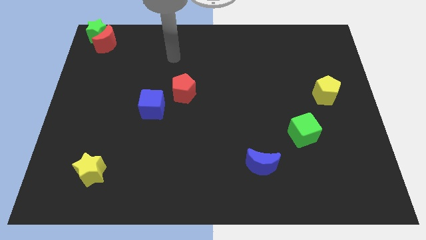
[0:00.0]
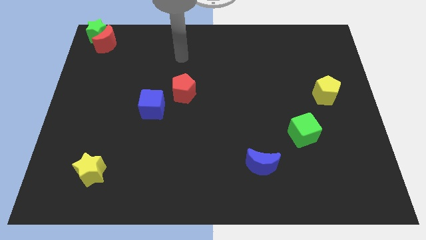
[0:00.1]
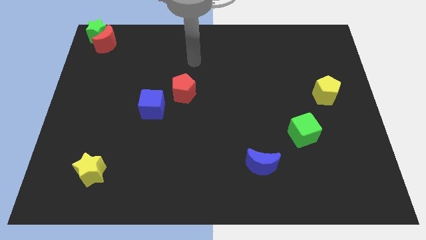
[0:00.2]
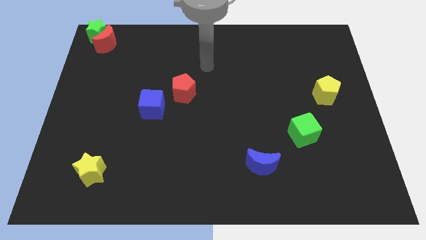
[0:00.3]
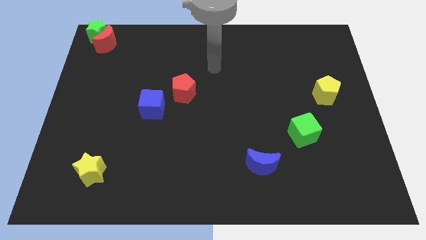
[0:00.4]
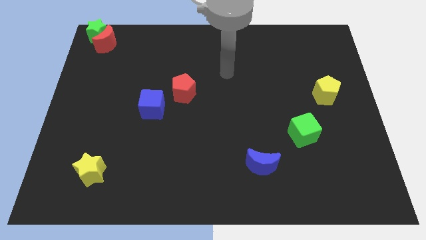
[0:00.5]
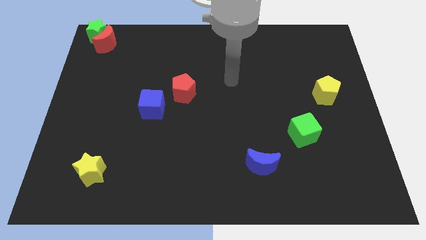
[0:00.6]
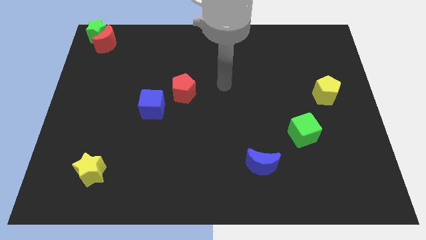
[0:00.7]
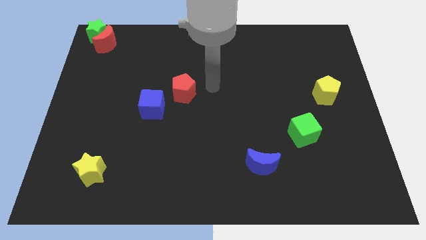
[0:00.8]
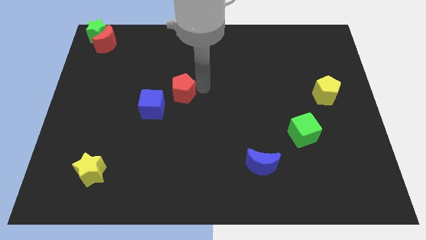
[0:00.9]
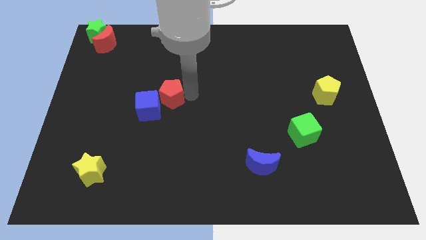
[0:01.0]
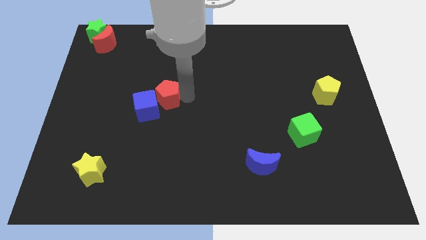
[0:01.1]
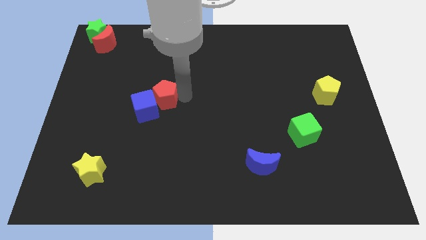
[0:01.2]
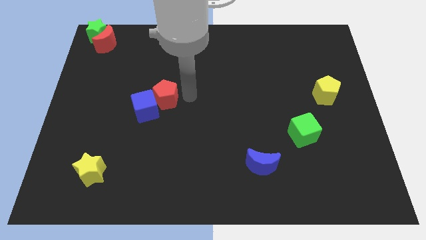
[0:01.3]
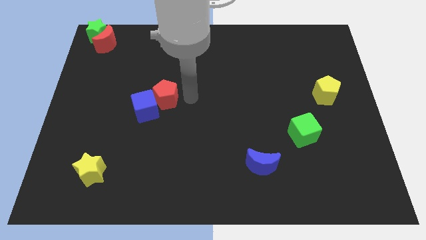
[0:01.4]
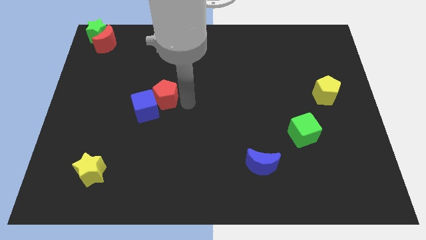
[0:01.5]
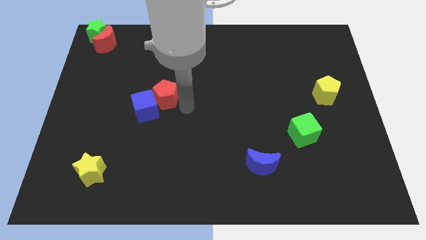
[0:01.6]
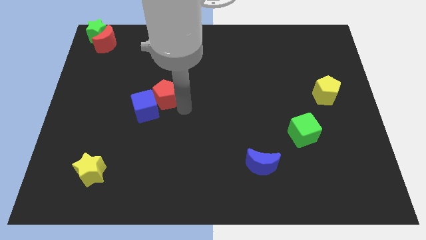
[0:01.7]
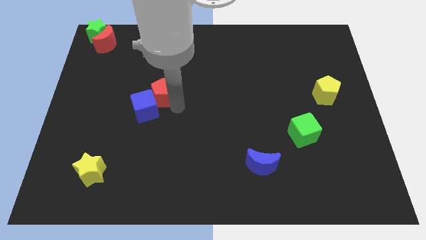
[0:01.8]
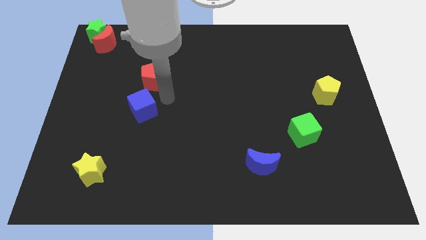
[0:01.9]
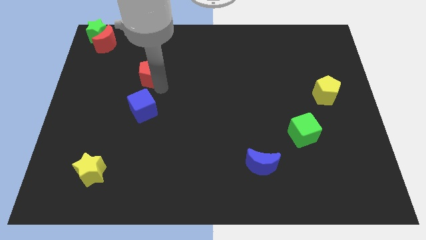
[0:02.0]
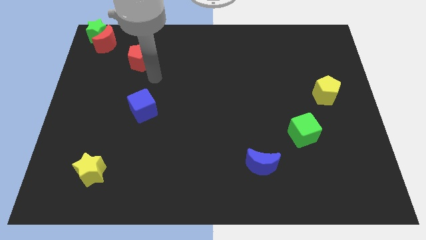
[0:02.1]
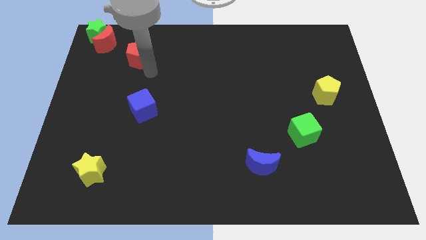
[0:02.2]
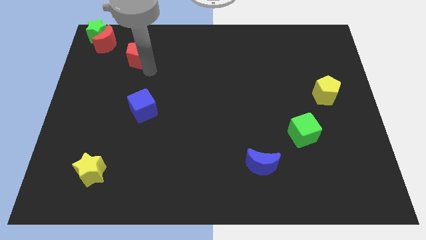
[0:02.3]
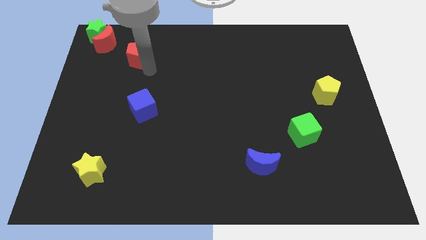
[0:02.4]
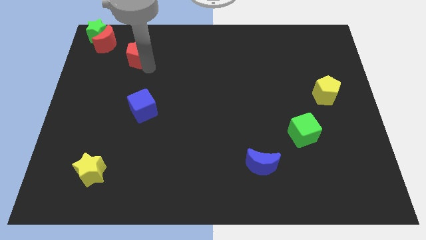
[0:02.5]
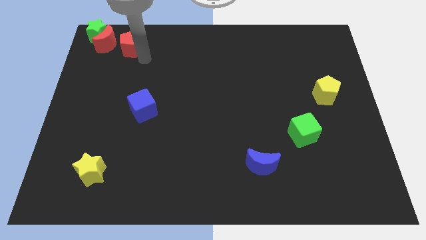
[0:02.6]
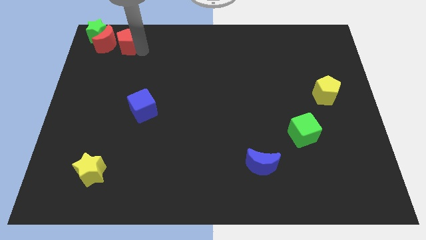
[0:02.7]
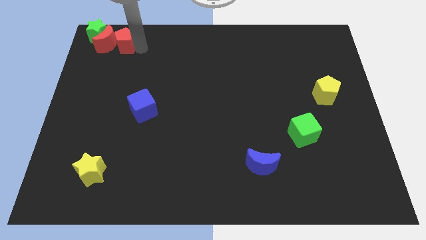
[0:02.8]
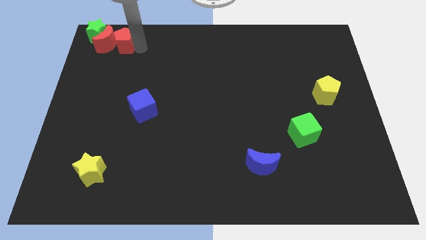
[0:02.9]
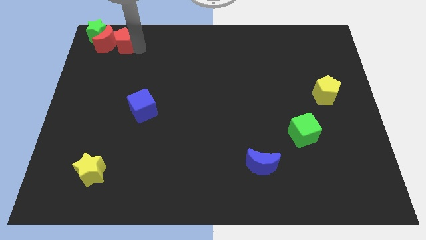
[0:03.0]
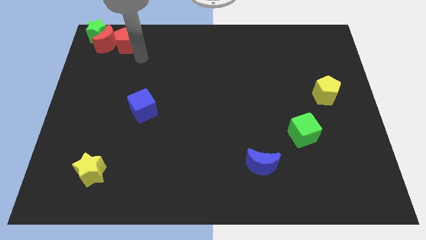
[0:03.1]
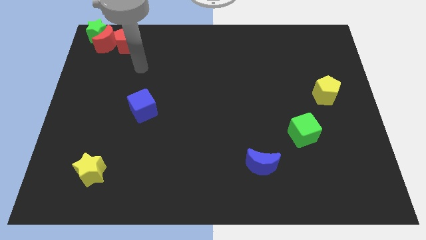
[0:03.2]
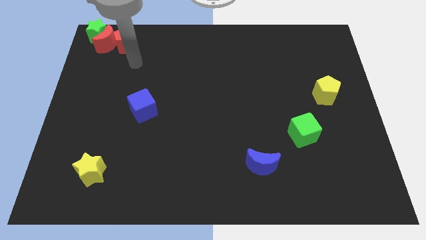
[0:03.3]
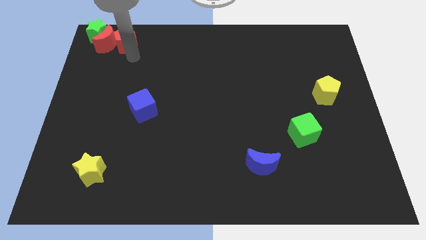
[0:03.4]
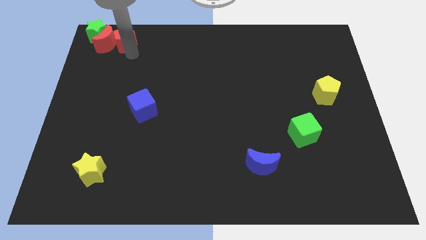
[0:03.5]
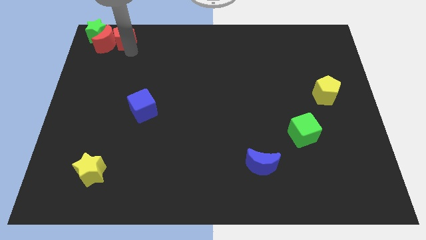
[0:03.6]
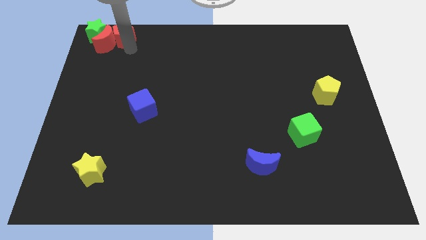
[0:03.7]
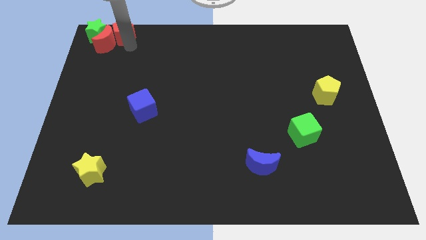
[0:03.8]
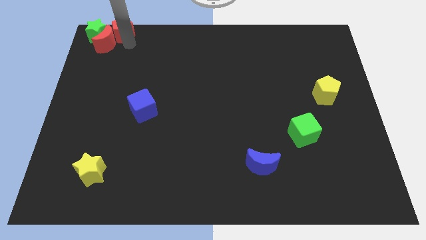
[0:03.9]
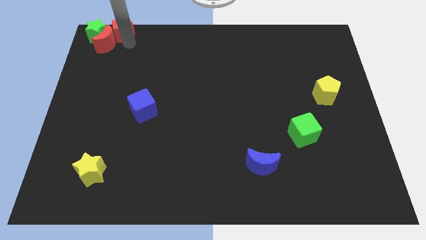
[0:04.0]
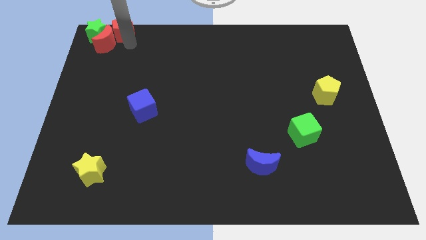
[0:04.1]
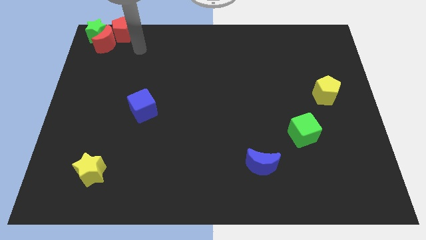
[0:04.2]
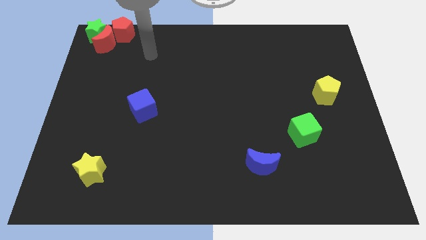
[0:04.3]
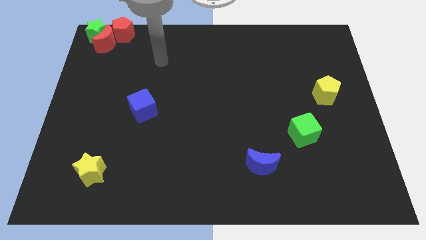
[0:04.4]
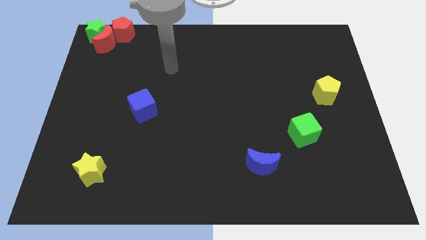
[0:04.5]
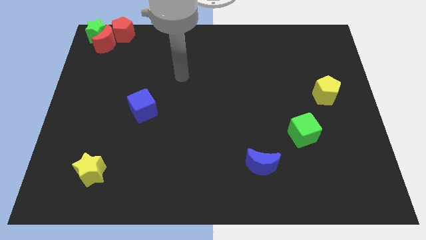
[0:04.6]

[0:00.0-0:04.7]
place the red pentagon above the red crescent

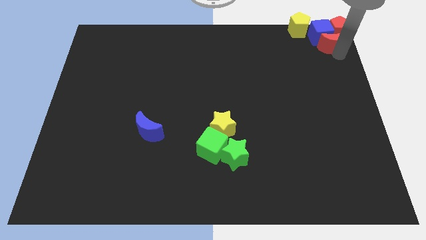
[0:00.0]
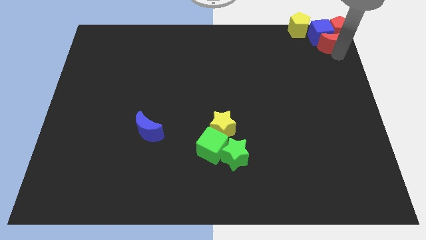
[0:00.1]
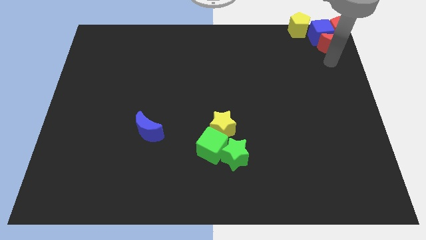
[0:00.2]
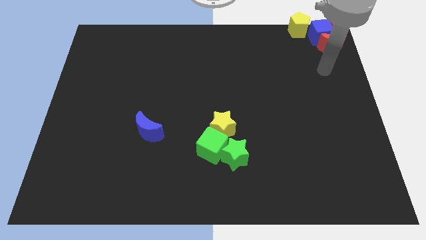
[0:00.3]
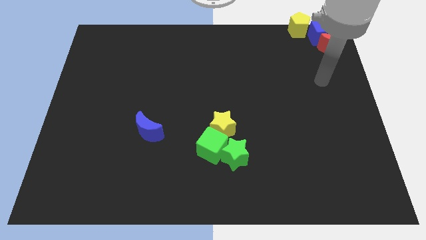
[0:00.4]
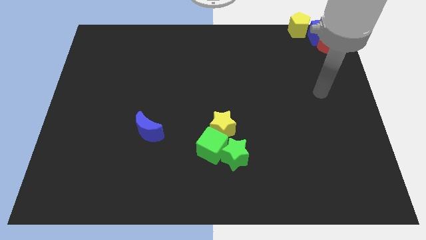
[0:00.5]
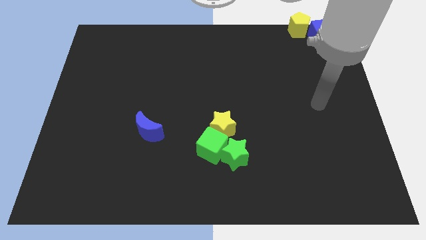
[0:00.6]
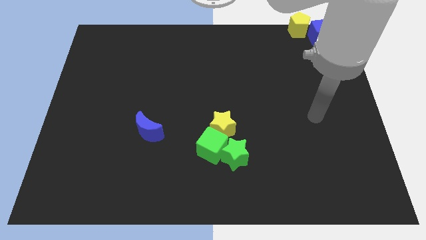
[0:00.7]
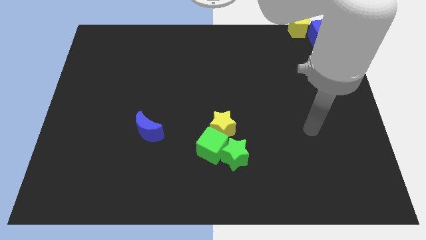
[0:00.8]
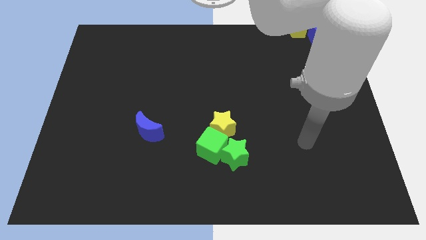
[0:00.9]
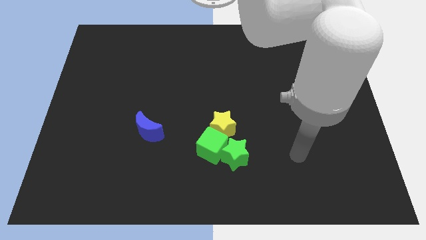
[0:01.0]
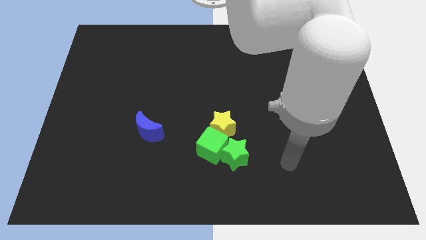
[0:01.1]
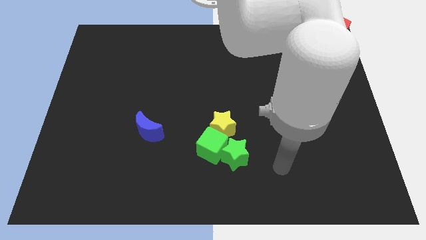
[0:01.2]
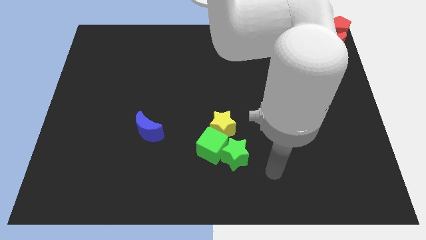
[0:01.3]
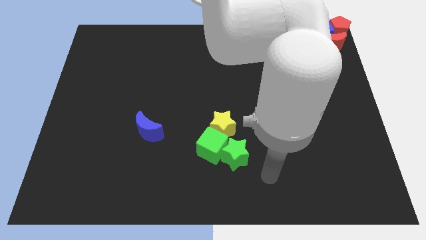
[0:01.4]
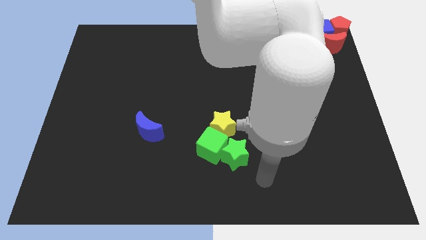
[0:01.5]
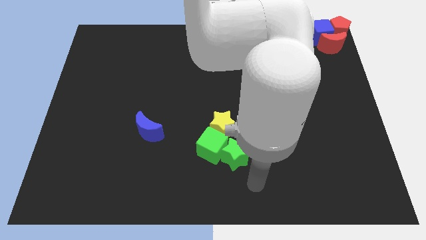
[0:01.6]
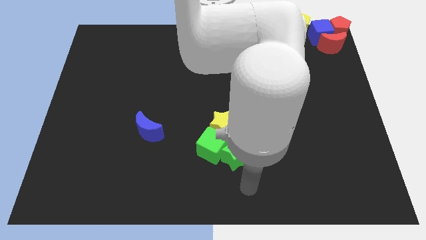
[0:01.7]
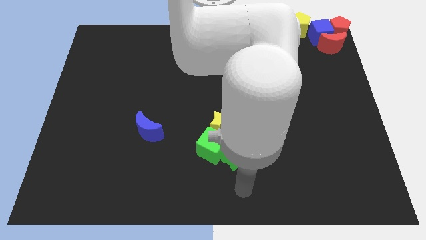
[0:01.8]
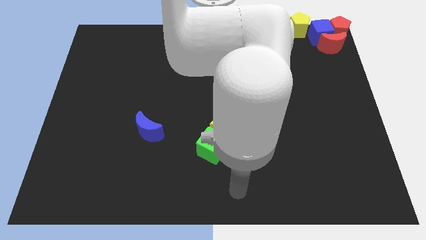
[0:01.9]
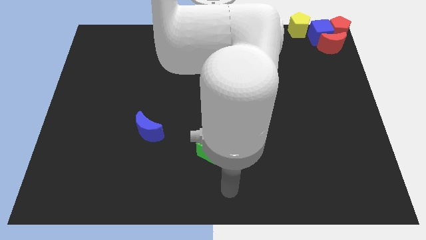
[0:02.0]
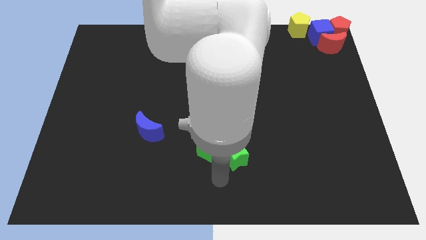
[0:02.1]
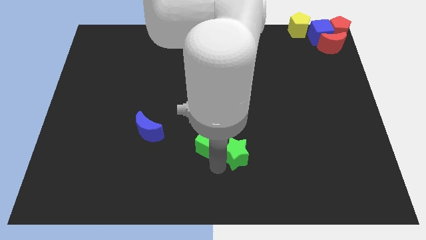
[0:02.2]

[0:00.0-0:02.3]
move the arm towards the green blocks

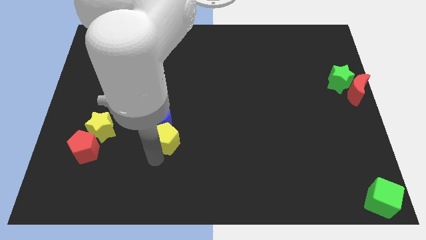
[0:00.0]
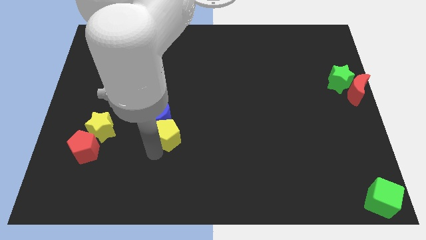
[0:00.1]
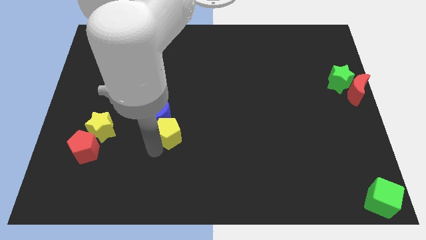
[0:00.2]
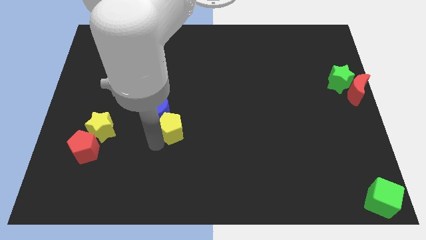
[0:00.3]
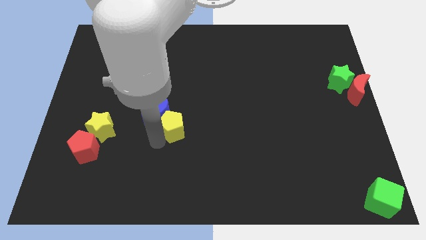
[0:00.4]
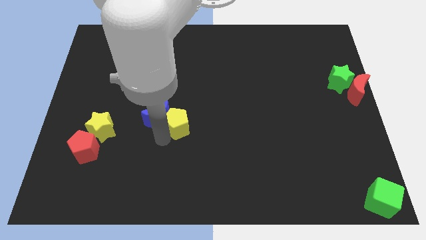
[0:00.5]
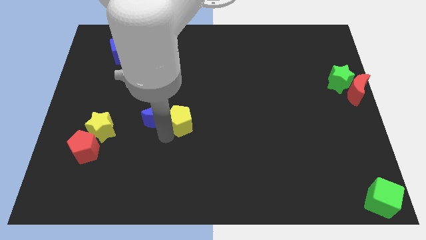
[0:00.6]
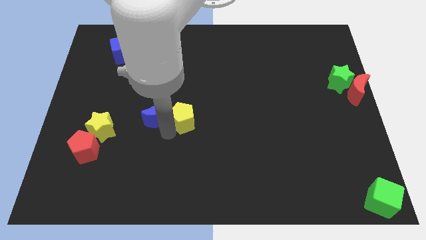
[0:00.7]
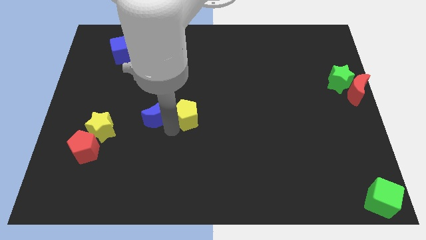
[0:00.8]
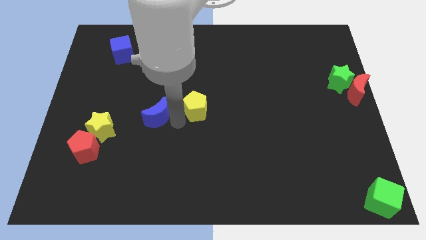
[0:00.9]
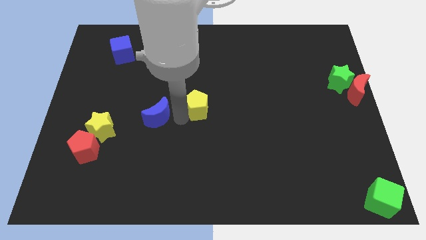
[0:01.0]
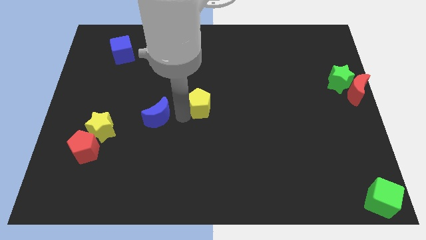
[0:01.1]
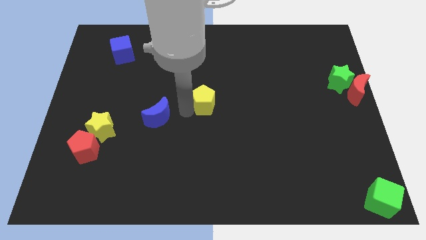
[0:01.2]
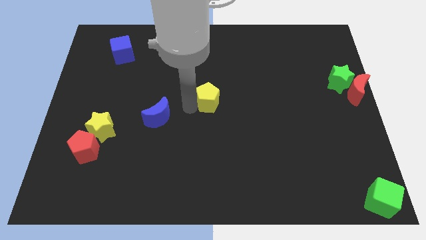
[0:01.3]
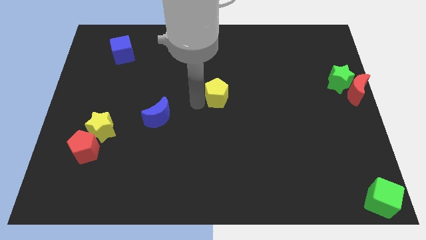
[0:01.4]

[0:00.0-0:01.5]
place the yellow pentagon at the center of the board

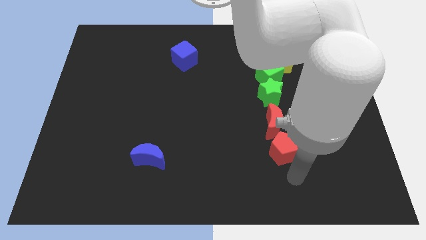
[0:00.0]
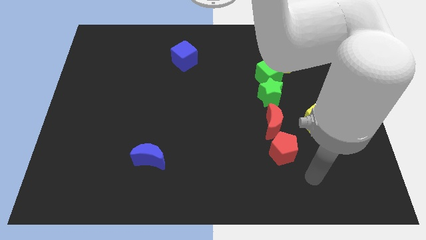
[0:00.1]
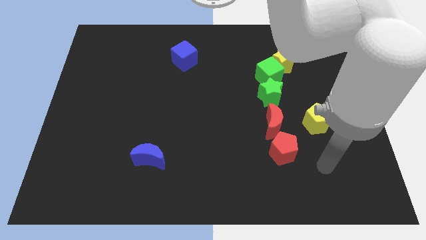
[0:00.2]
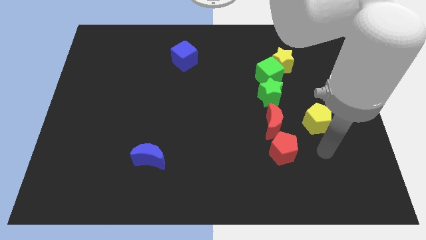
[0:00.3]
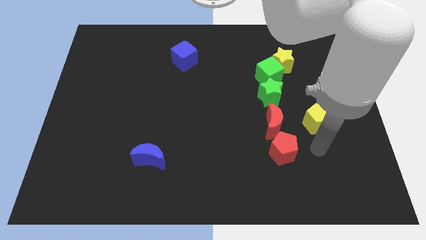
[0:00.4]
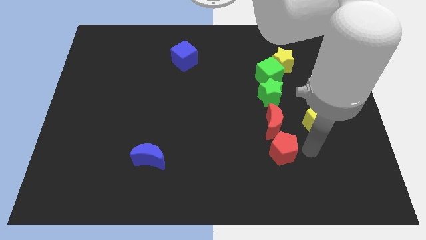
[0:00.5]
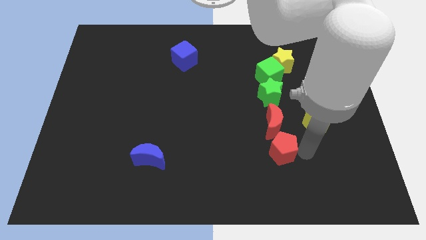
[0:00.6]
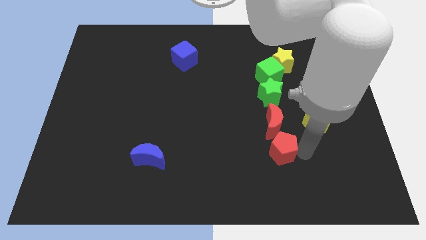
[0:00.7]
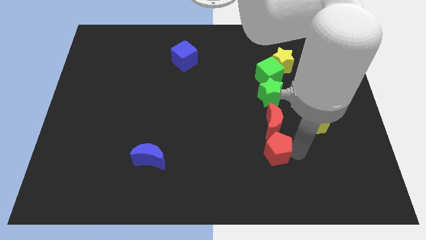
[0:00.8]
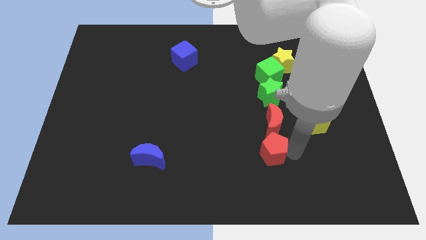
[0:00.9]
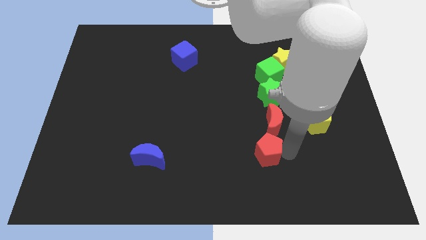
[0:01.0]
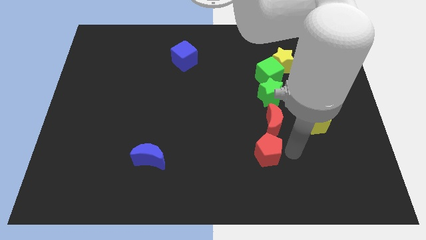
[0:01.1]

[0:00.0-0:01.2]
push the red pentagon at the bottom of red crescent
